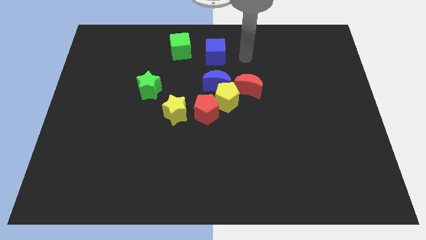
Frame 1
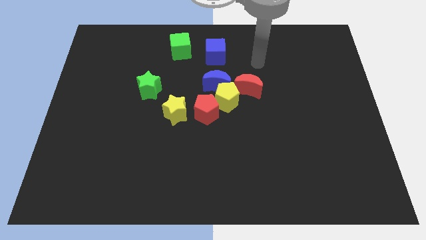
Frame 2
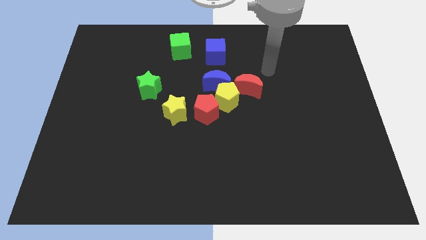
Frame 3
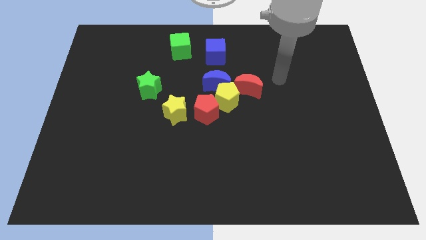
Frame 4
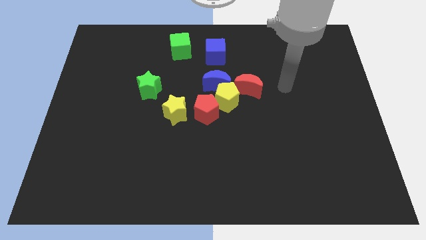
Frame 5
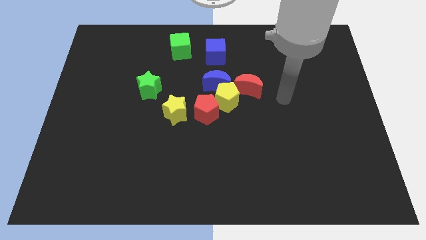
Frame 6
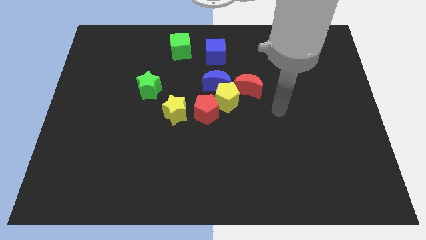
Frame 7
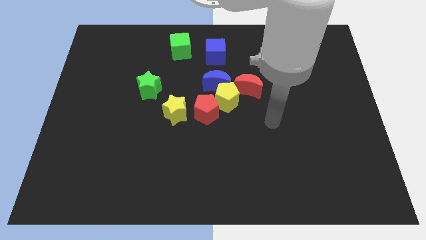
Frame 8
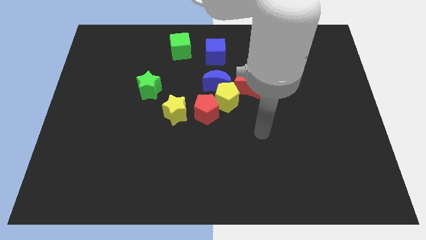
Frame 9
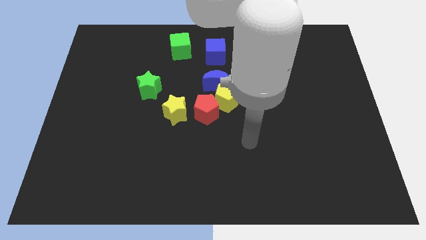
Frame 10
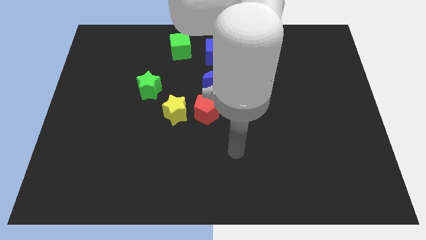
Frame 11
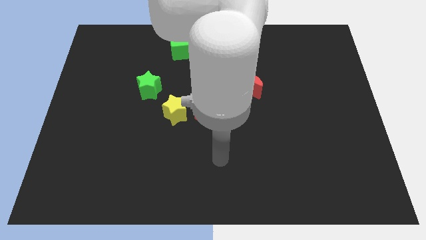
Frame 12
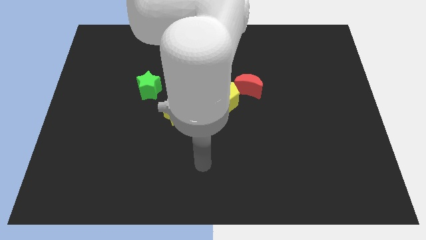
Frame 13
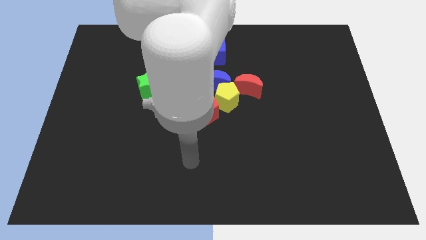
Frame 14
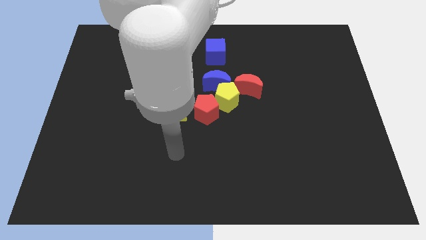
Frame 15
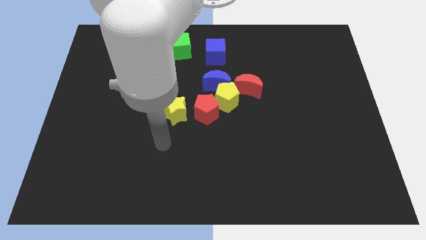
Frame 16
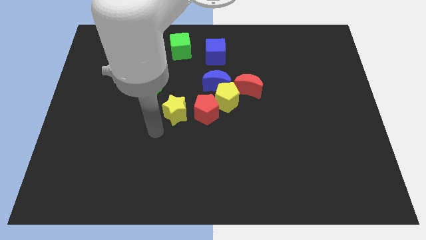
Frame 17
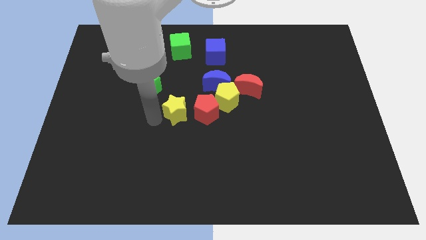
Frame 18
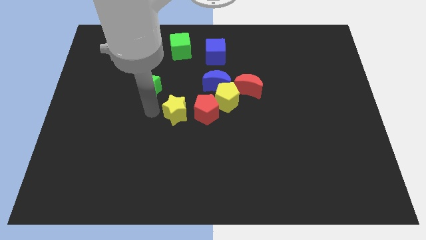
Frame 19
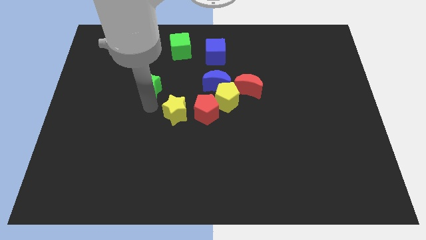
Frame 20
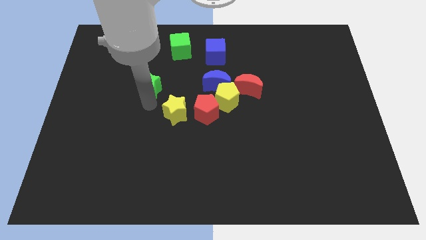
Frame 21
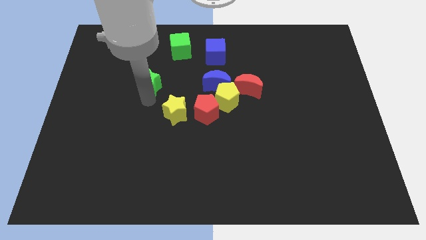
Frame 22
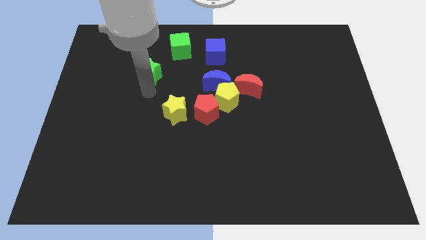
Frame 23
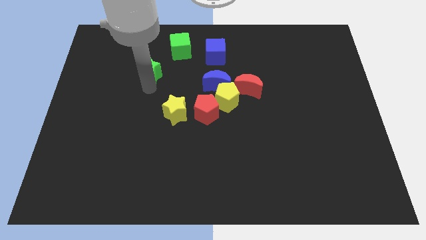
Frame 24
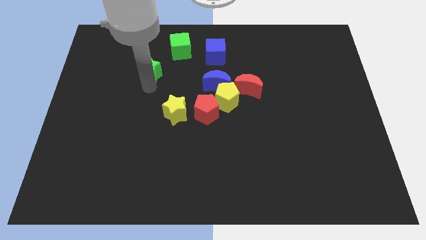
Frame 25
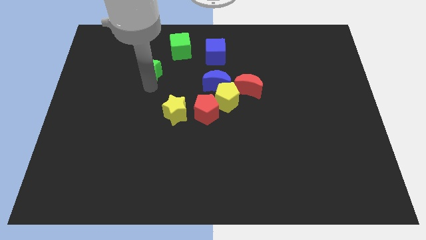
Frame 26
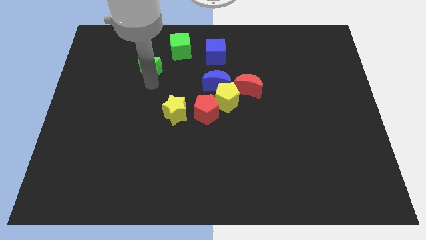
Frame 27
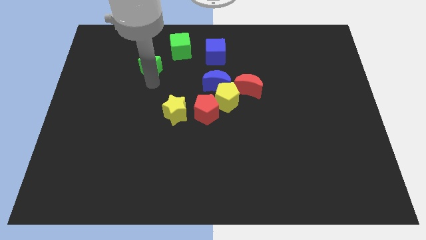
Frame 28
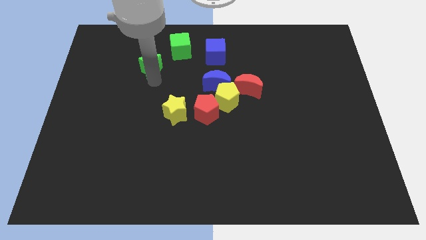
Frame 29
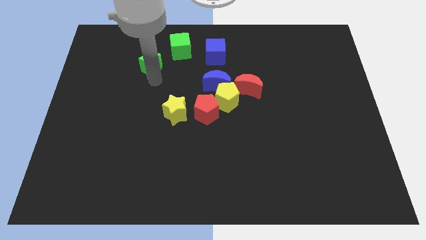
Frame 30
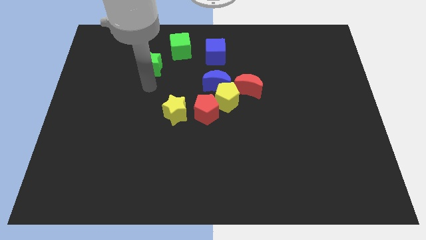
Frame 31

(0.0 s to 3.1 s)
push the green star slightly upwards

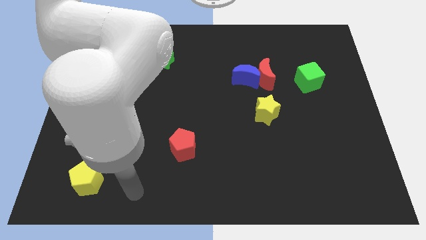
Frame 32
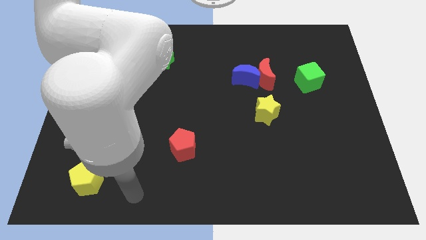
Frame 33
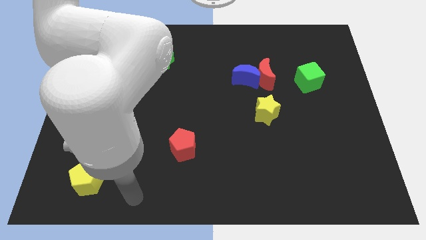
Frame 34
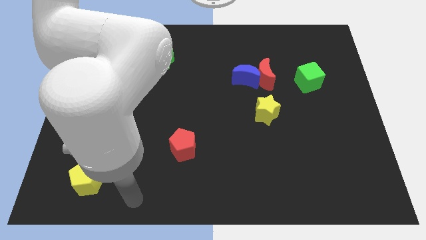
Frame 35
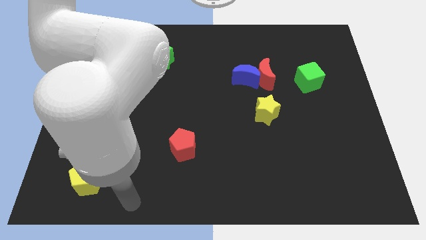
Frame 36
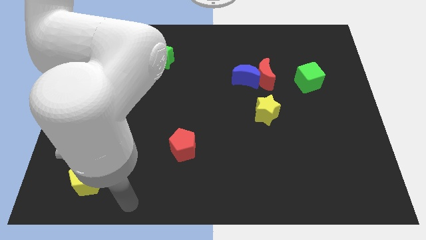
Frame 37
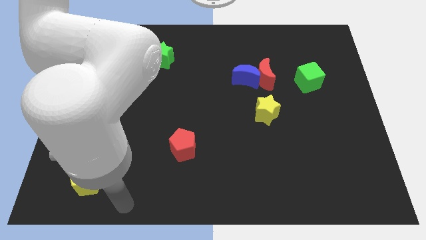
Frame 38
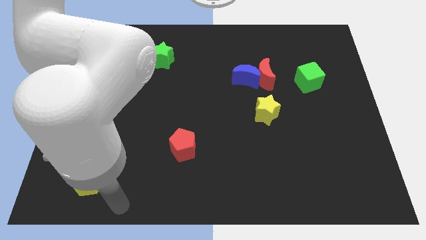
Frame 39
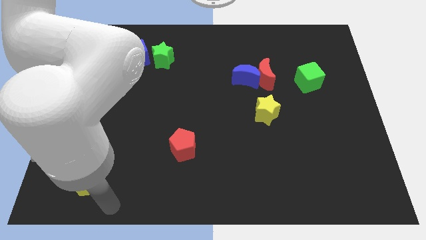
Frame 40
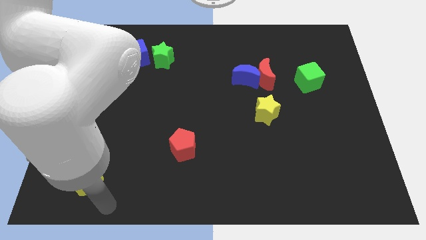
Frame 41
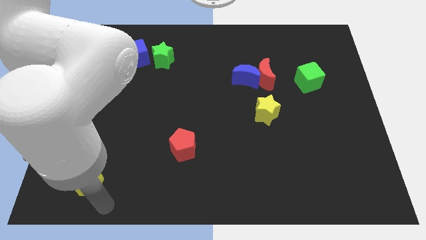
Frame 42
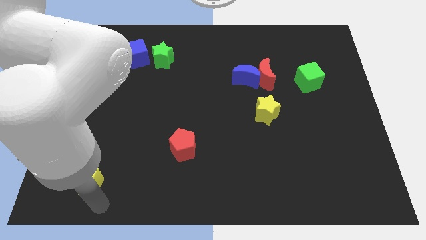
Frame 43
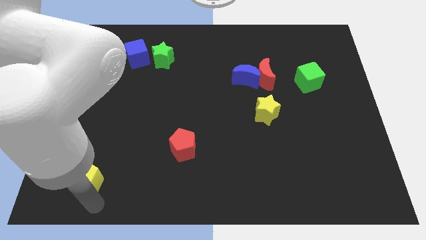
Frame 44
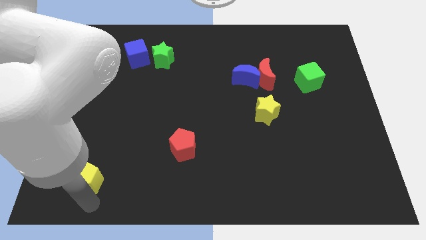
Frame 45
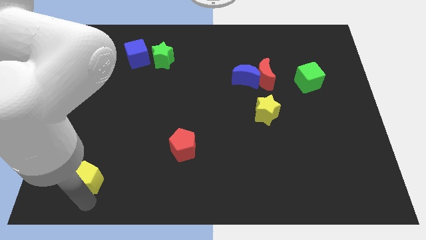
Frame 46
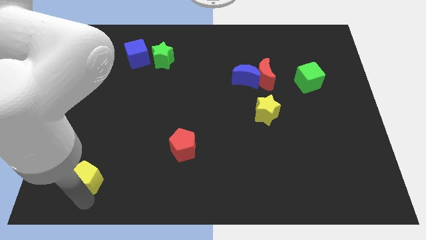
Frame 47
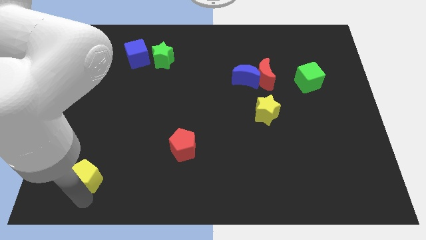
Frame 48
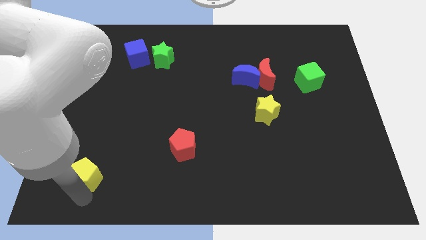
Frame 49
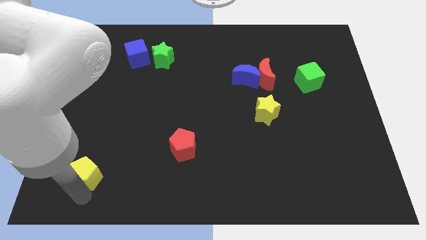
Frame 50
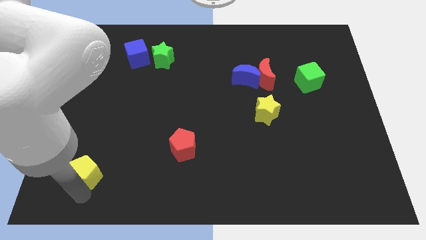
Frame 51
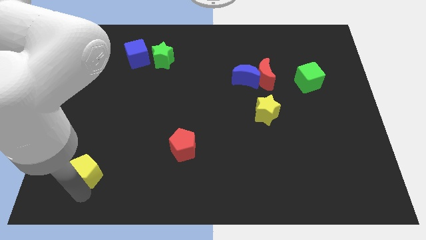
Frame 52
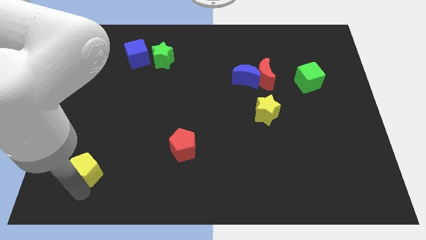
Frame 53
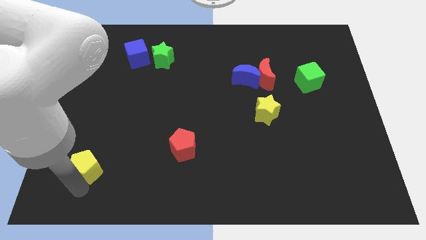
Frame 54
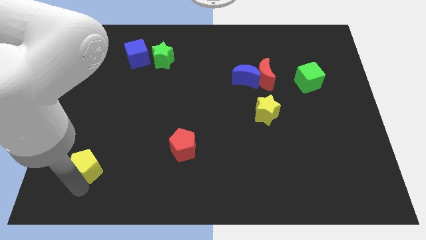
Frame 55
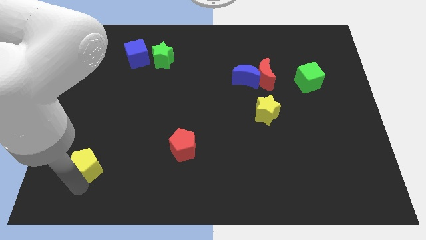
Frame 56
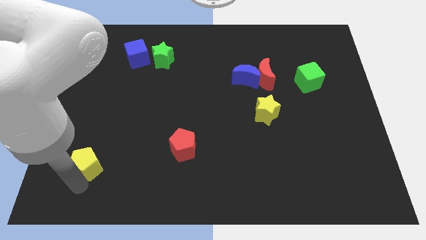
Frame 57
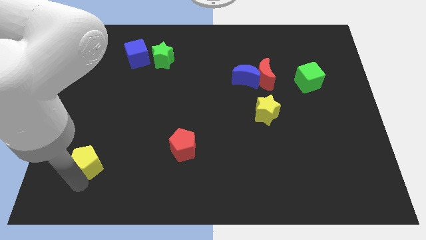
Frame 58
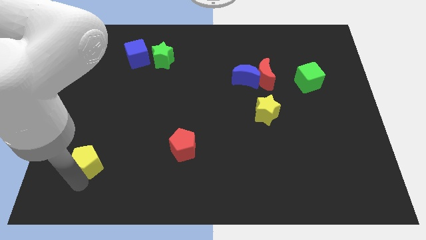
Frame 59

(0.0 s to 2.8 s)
move the yellow pentagon slightly up

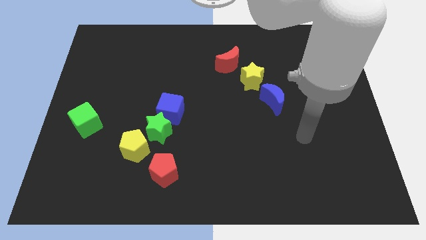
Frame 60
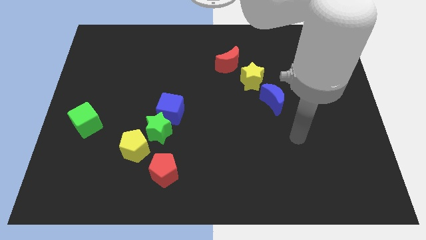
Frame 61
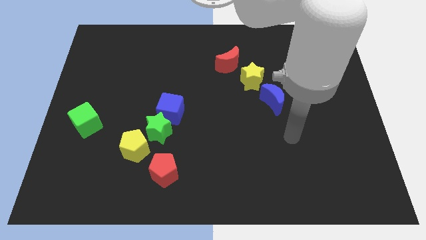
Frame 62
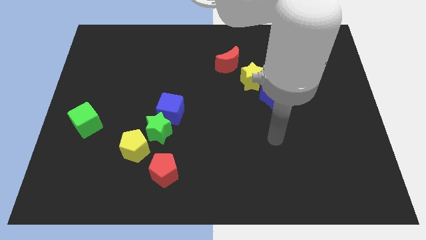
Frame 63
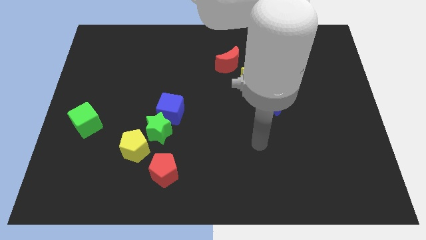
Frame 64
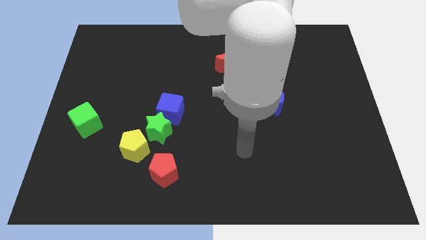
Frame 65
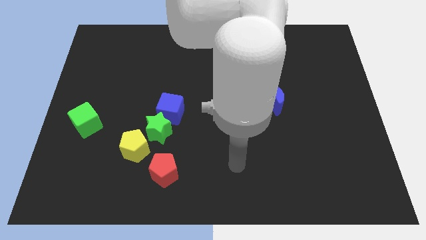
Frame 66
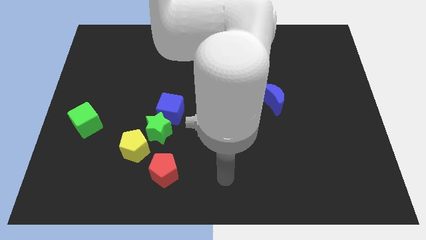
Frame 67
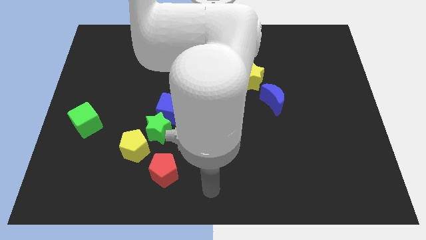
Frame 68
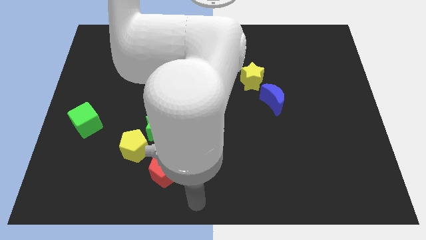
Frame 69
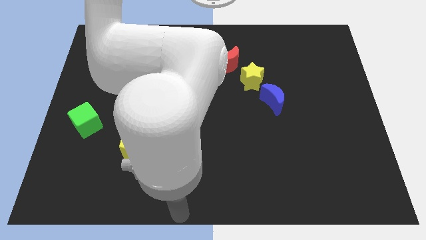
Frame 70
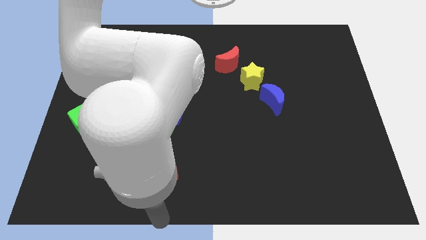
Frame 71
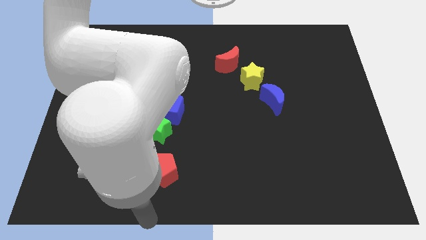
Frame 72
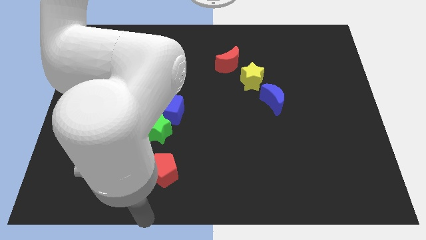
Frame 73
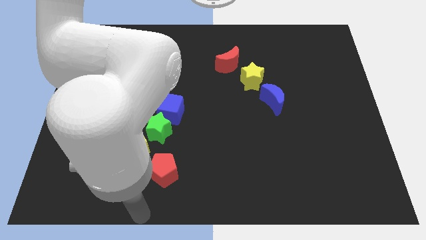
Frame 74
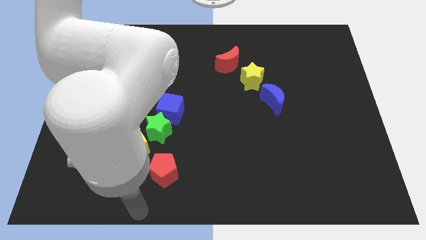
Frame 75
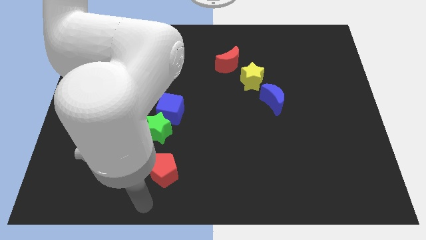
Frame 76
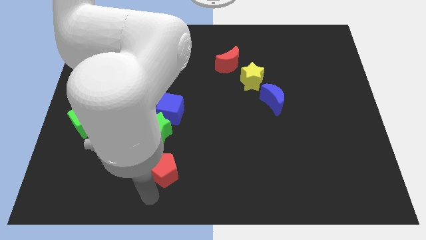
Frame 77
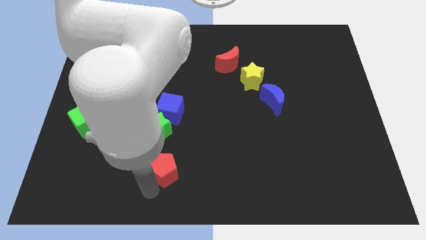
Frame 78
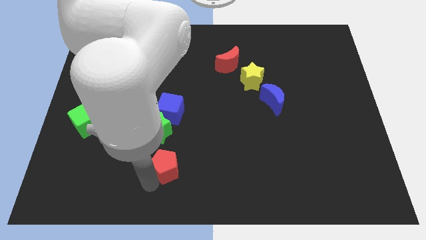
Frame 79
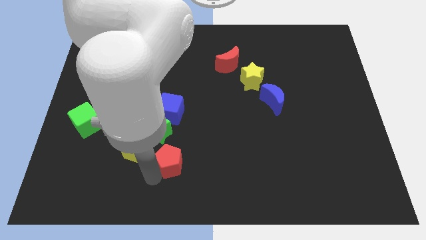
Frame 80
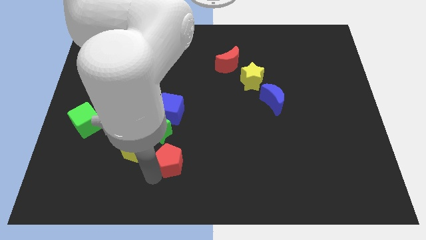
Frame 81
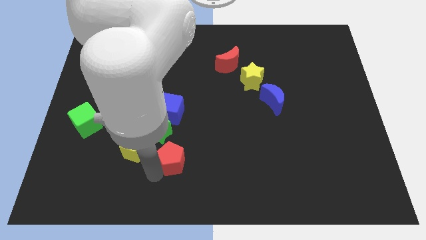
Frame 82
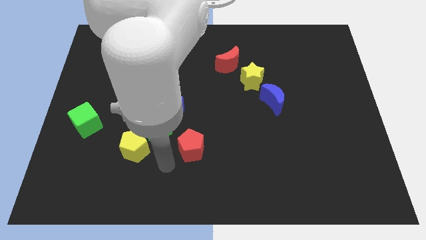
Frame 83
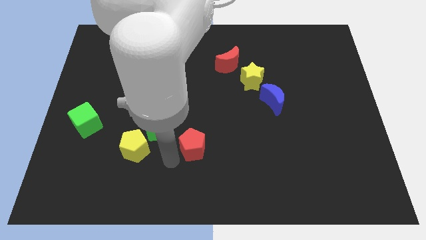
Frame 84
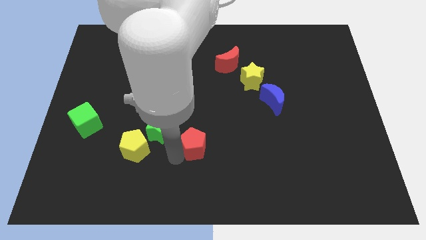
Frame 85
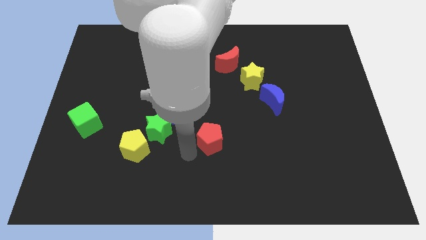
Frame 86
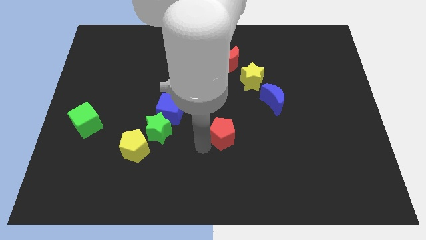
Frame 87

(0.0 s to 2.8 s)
move red pentagon diagonally upwards

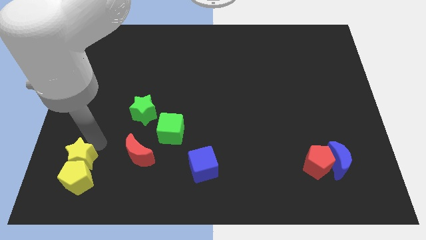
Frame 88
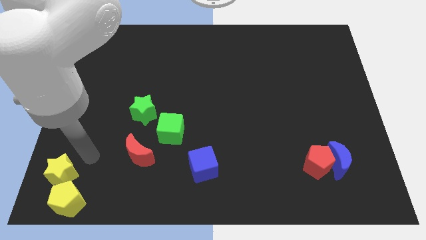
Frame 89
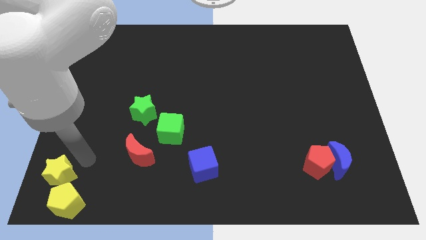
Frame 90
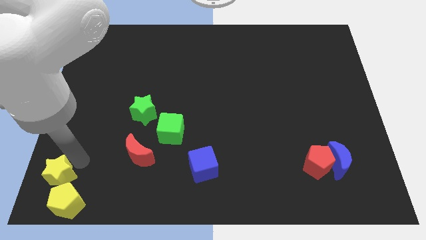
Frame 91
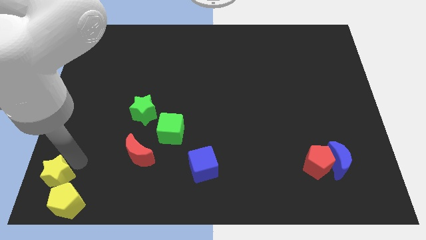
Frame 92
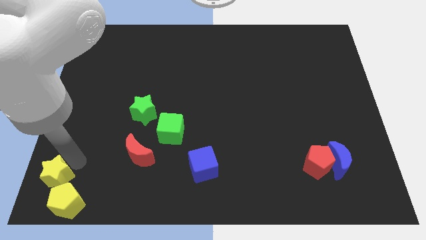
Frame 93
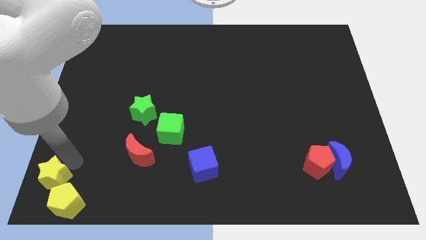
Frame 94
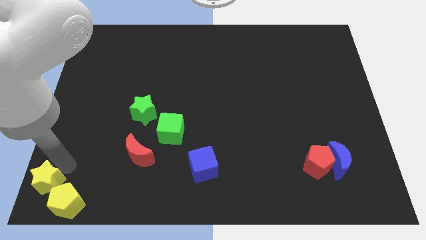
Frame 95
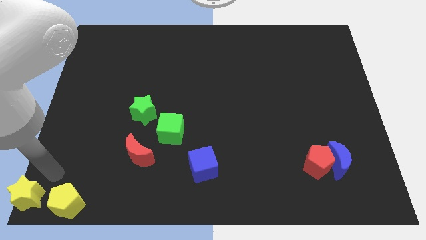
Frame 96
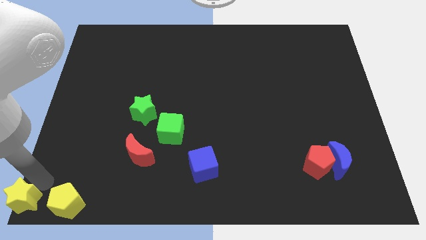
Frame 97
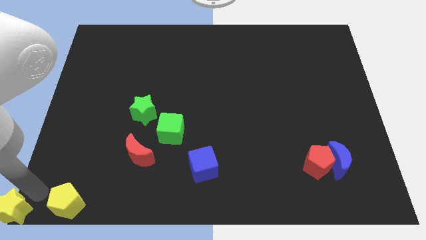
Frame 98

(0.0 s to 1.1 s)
push yellow star to bottom left of the board
